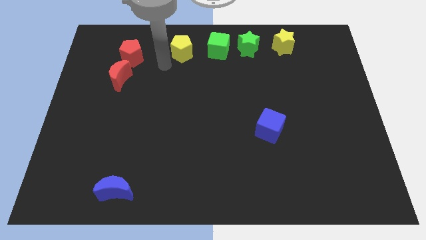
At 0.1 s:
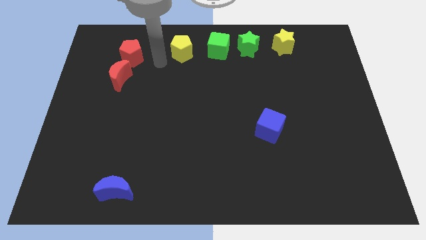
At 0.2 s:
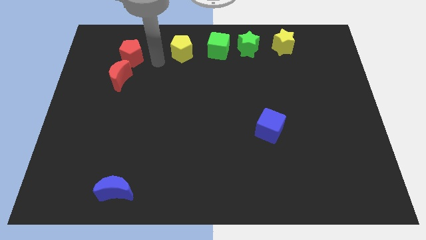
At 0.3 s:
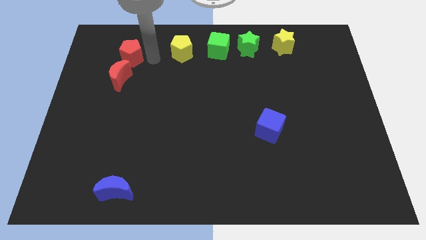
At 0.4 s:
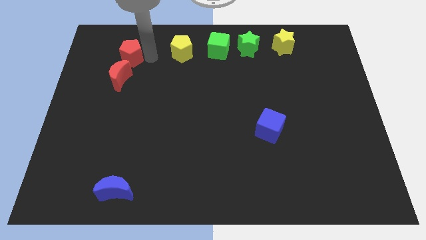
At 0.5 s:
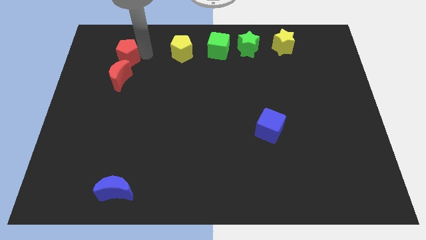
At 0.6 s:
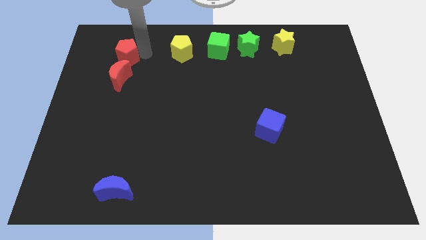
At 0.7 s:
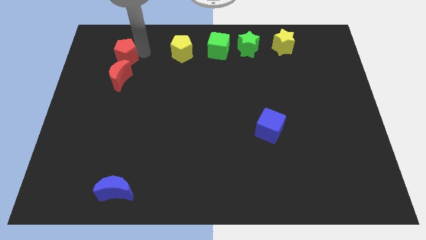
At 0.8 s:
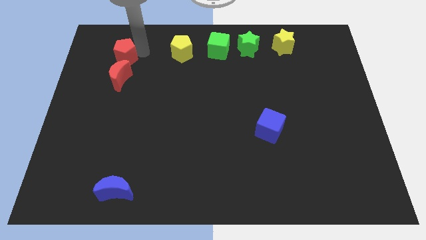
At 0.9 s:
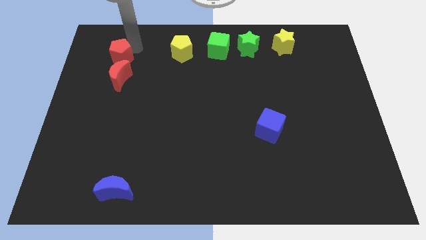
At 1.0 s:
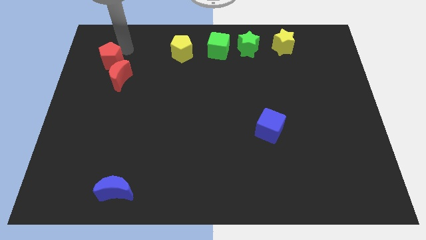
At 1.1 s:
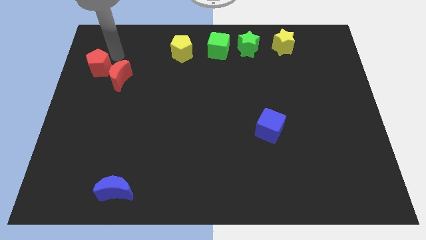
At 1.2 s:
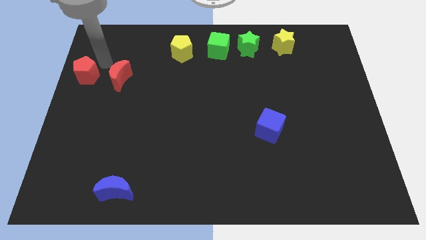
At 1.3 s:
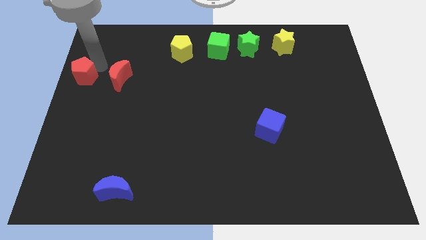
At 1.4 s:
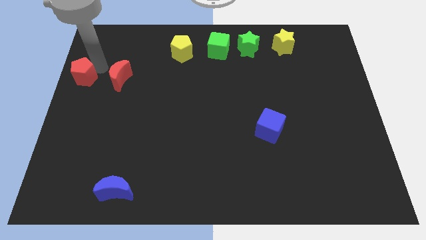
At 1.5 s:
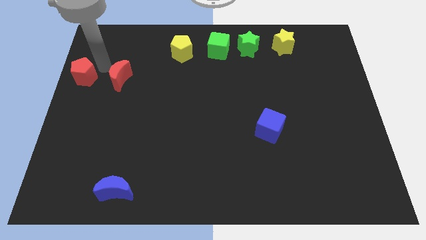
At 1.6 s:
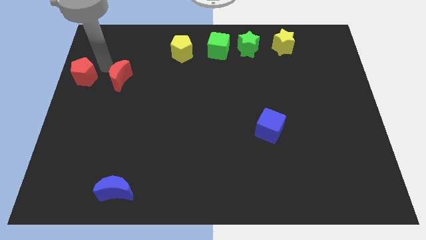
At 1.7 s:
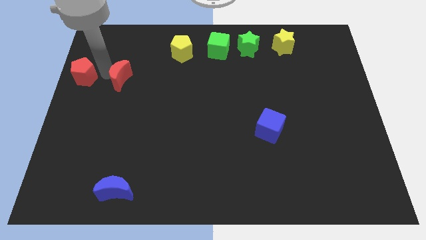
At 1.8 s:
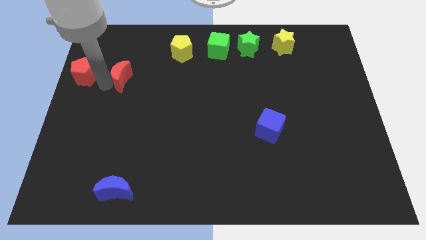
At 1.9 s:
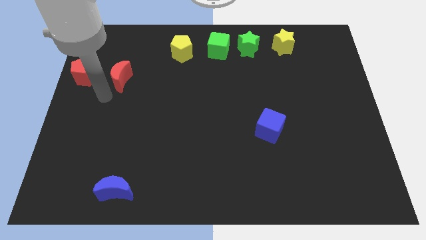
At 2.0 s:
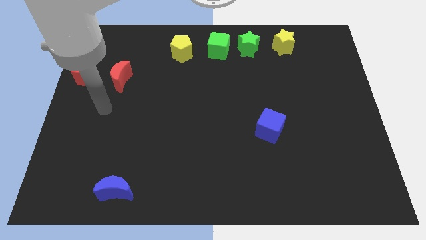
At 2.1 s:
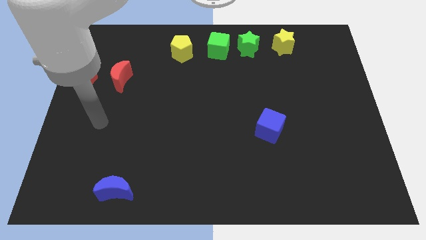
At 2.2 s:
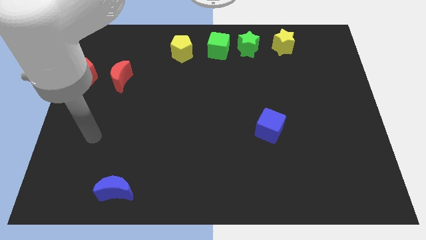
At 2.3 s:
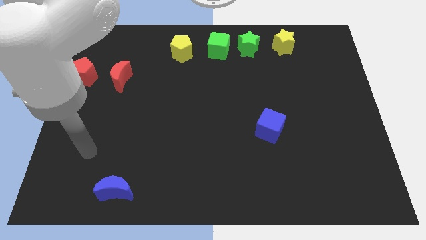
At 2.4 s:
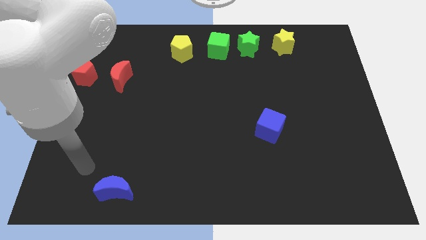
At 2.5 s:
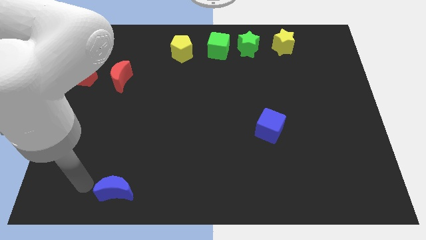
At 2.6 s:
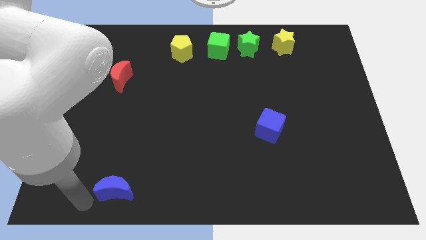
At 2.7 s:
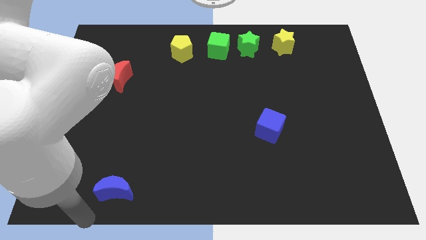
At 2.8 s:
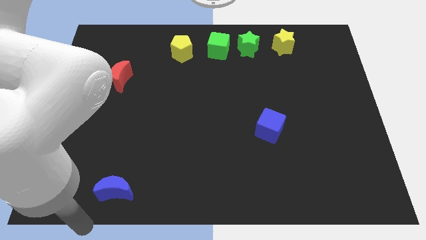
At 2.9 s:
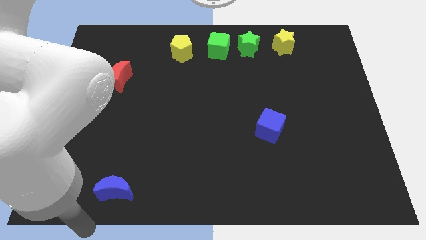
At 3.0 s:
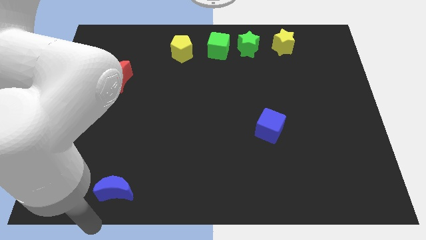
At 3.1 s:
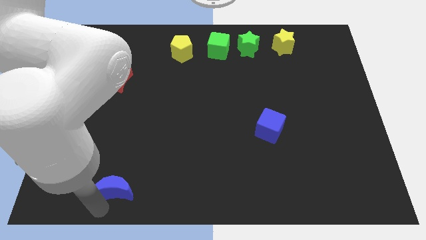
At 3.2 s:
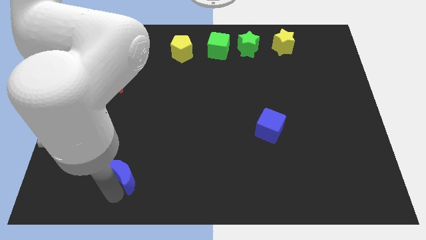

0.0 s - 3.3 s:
put the red pentagon on the left side of the red moon

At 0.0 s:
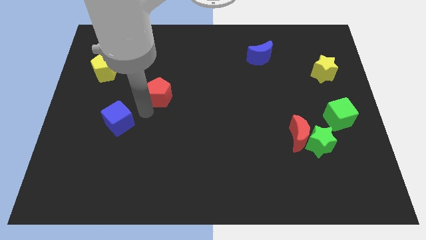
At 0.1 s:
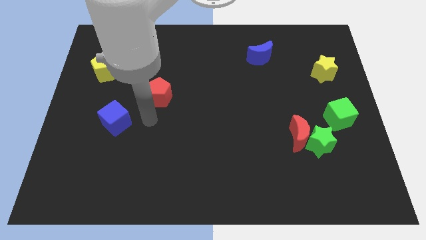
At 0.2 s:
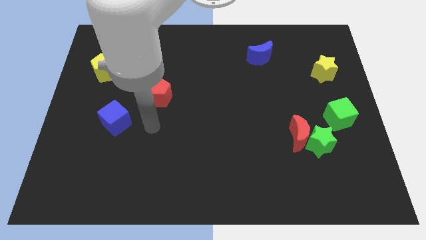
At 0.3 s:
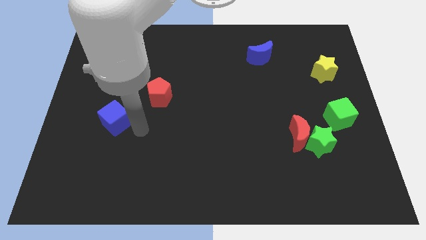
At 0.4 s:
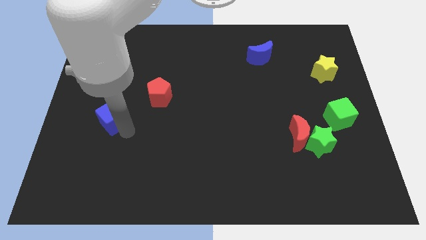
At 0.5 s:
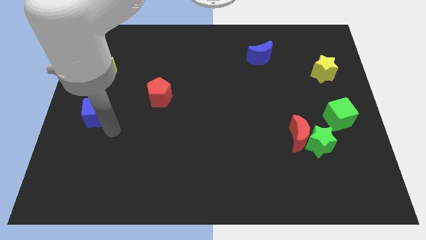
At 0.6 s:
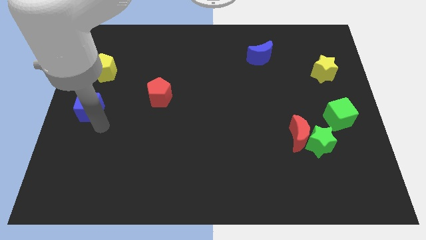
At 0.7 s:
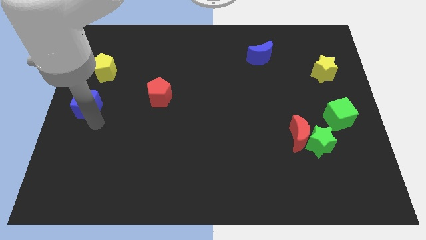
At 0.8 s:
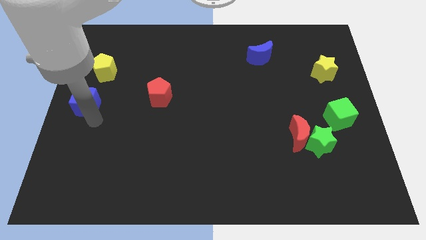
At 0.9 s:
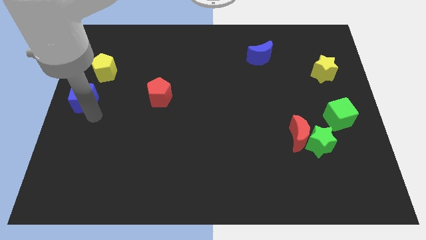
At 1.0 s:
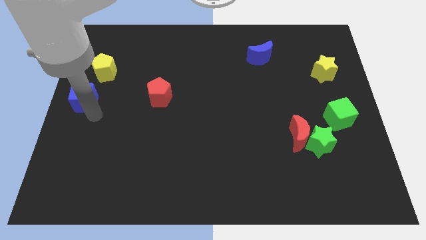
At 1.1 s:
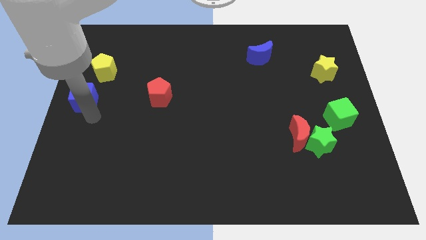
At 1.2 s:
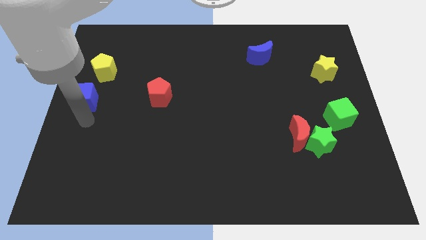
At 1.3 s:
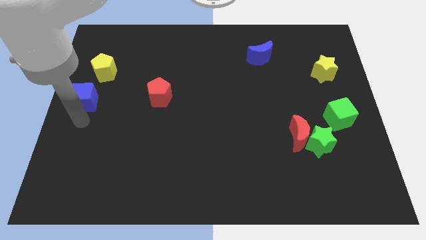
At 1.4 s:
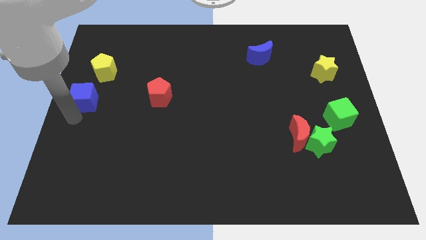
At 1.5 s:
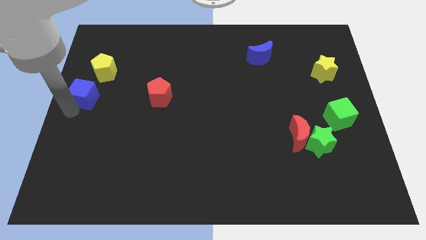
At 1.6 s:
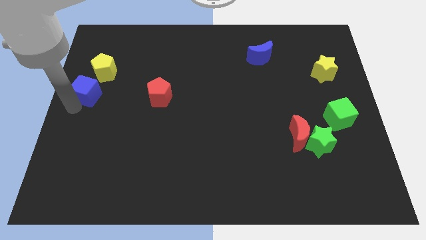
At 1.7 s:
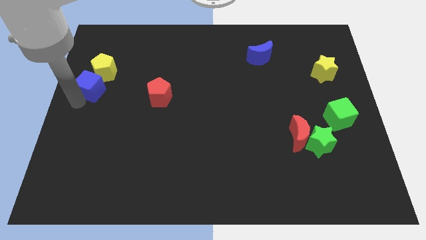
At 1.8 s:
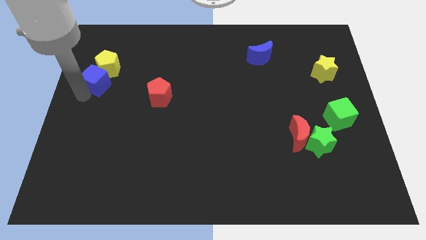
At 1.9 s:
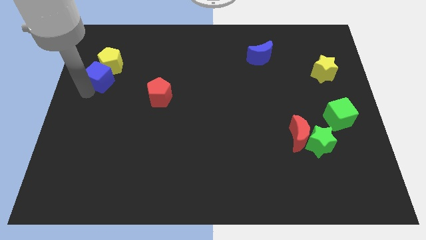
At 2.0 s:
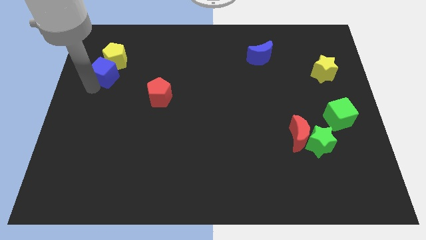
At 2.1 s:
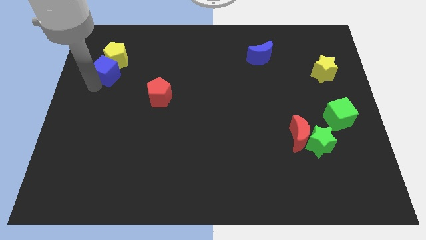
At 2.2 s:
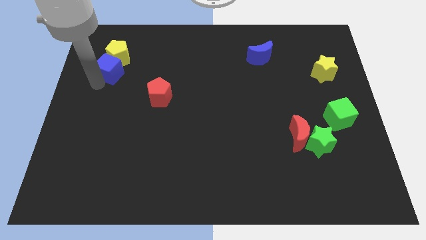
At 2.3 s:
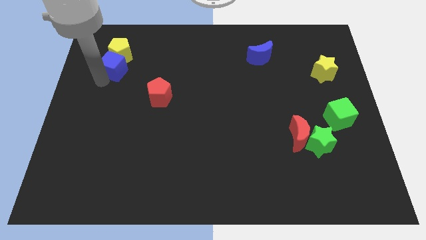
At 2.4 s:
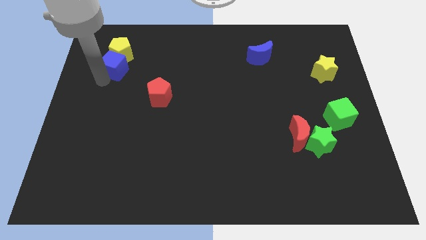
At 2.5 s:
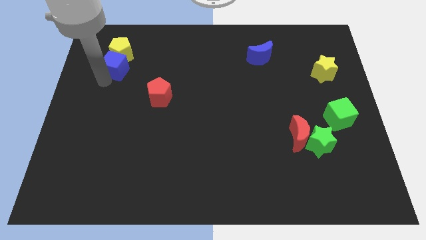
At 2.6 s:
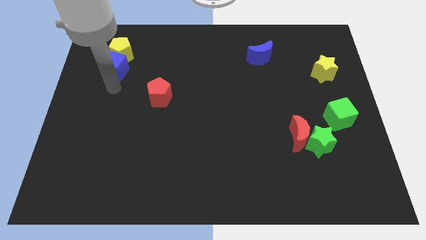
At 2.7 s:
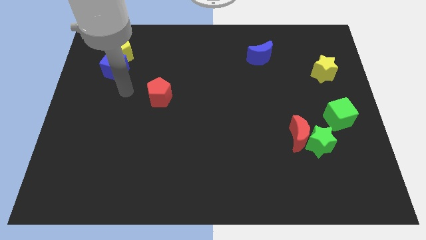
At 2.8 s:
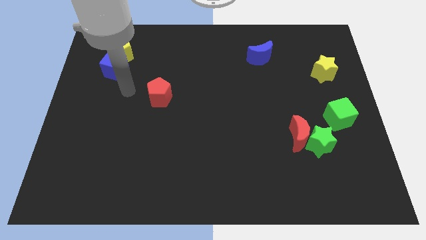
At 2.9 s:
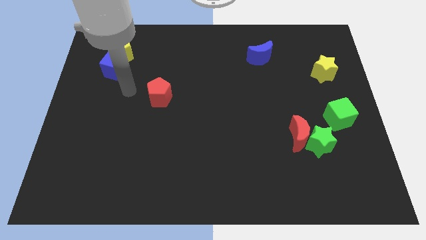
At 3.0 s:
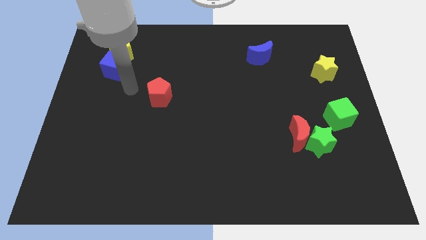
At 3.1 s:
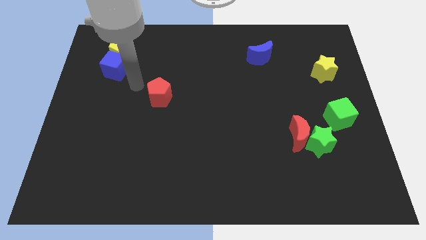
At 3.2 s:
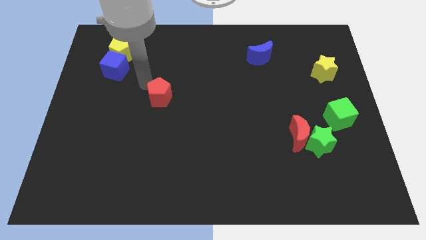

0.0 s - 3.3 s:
push the blue cube into the yellow pentagon

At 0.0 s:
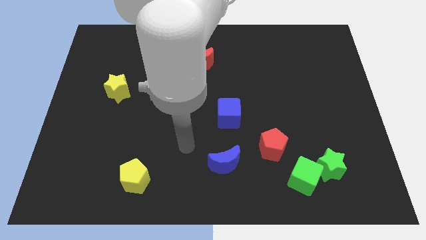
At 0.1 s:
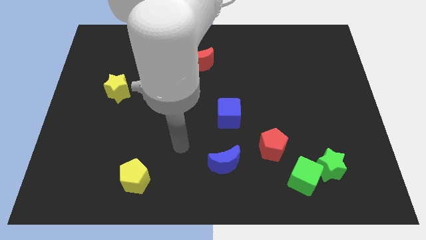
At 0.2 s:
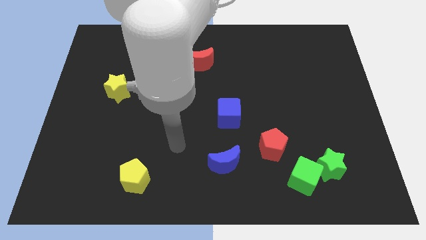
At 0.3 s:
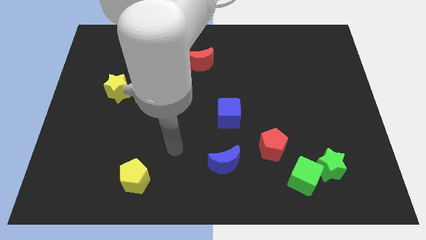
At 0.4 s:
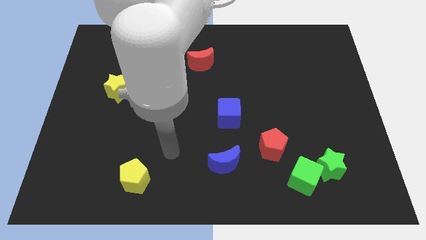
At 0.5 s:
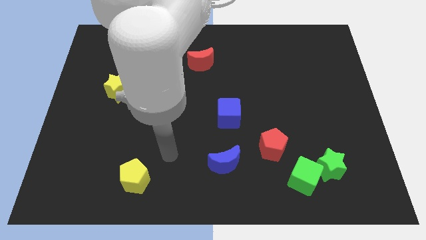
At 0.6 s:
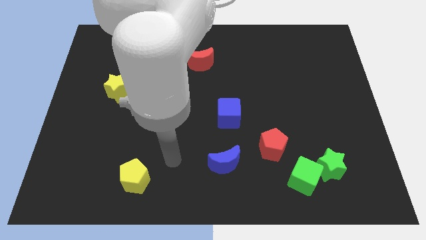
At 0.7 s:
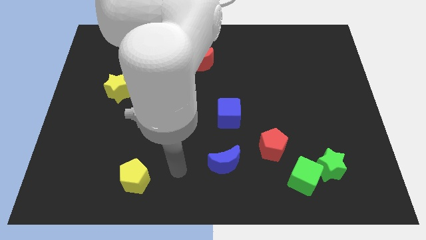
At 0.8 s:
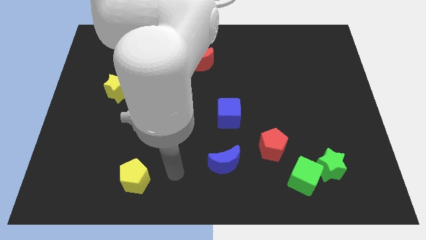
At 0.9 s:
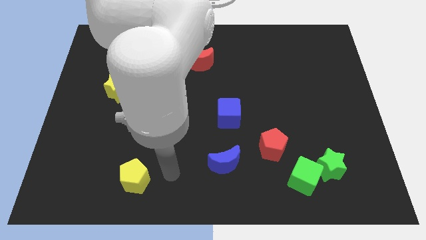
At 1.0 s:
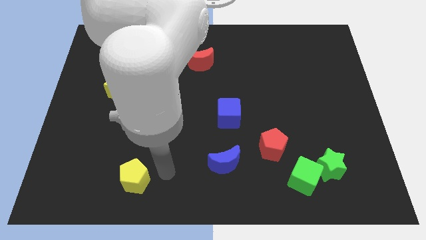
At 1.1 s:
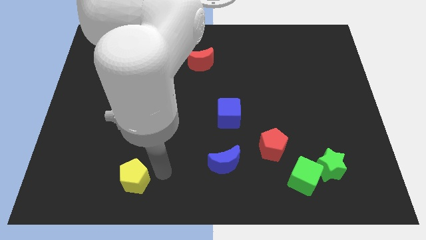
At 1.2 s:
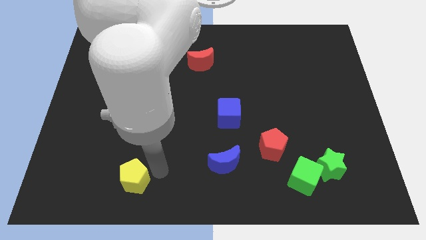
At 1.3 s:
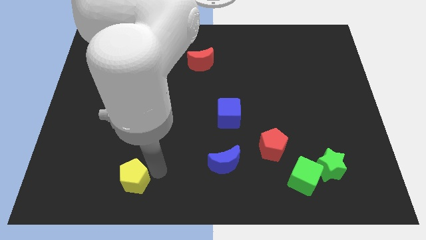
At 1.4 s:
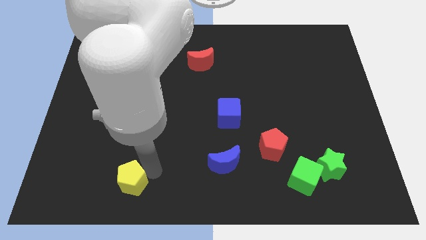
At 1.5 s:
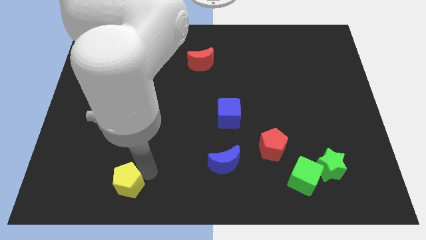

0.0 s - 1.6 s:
touch the yellow pentagon

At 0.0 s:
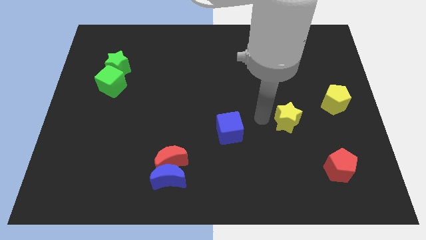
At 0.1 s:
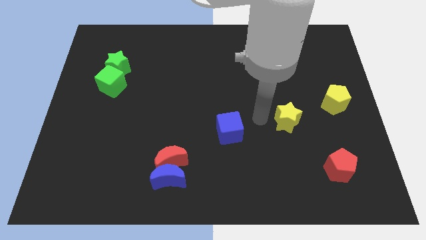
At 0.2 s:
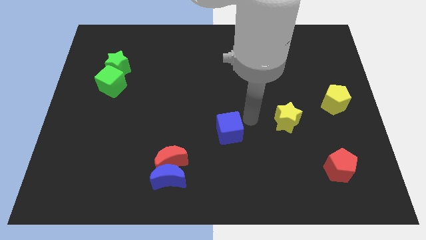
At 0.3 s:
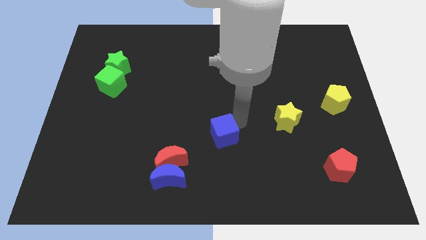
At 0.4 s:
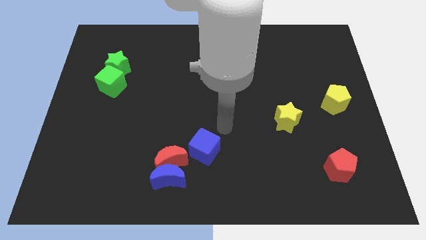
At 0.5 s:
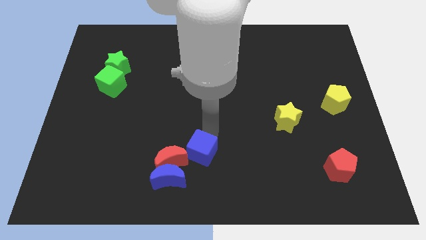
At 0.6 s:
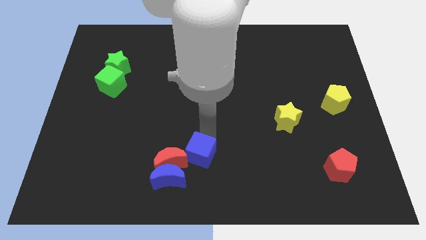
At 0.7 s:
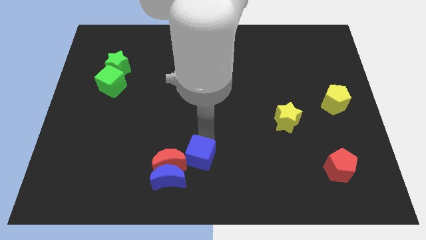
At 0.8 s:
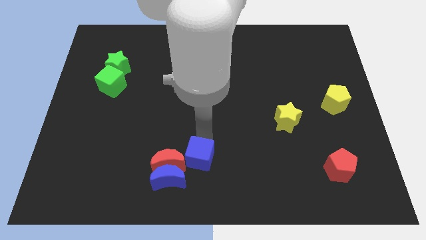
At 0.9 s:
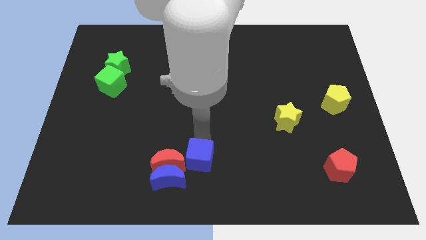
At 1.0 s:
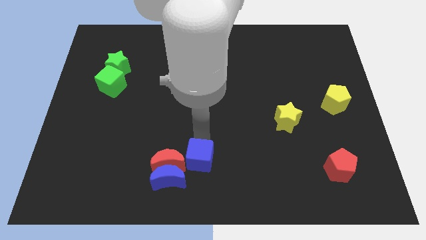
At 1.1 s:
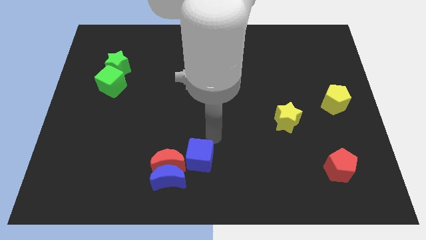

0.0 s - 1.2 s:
place the blue cube at the right side of the red moon
